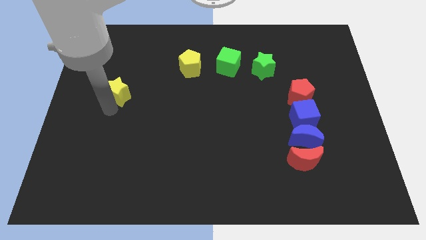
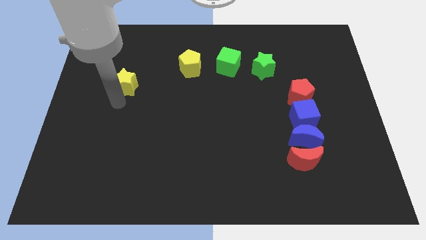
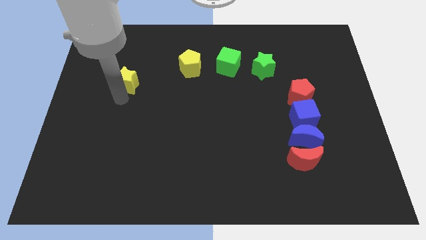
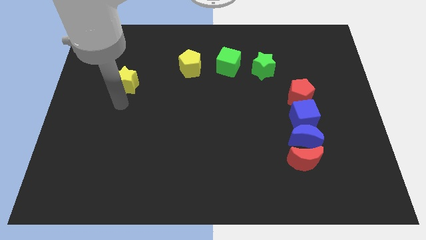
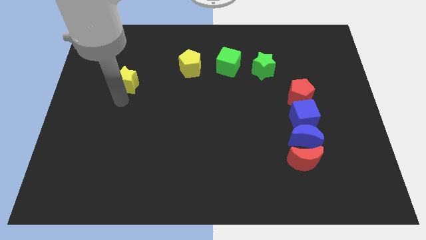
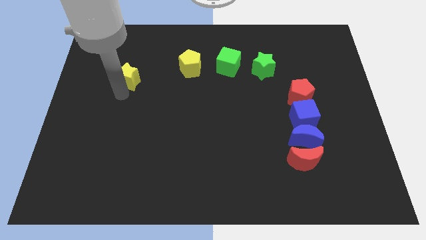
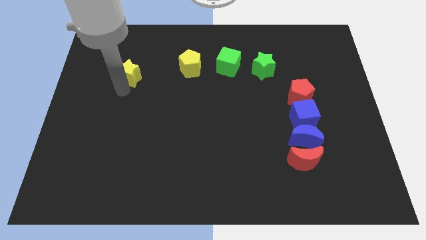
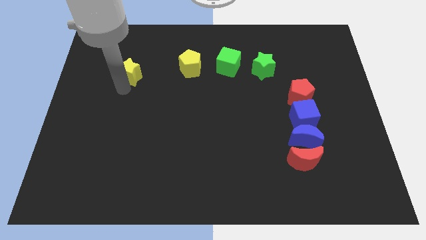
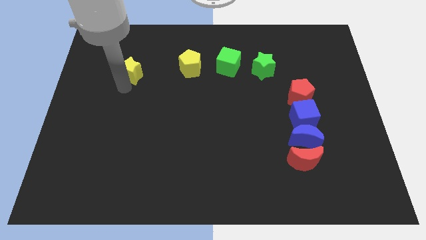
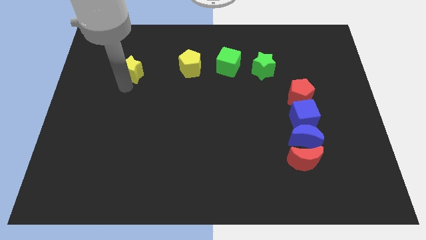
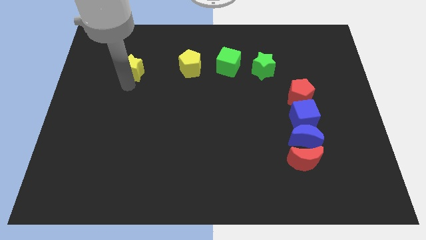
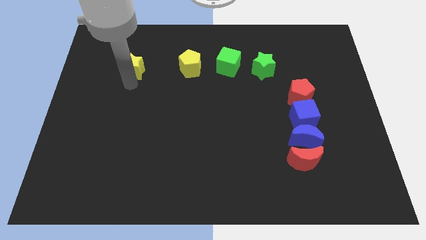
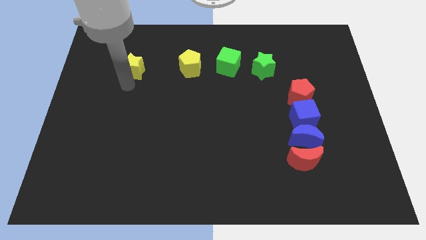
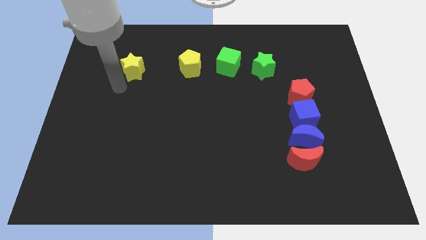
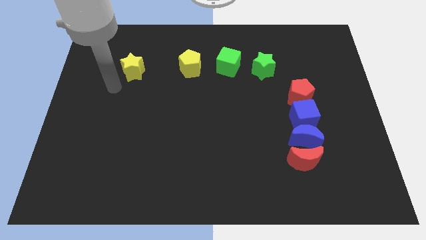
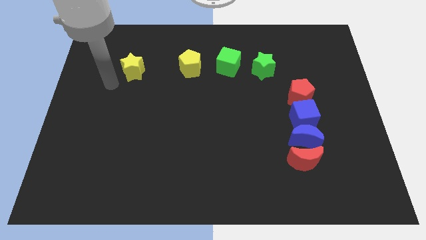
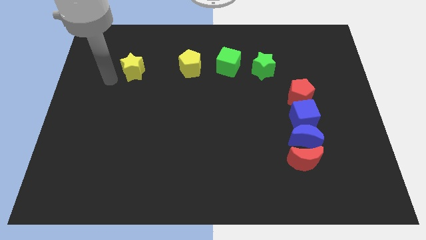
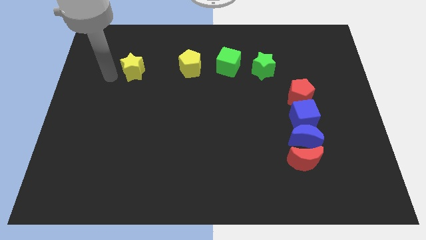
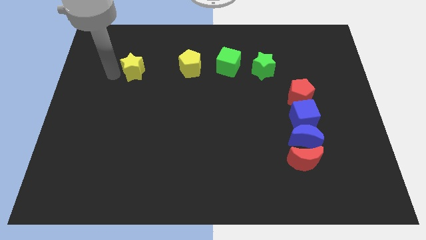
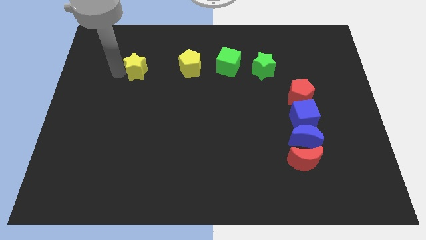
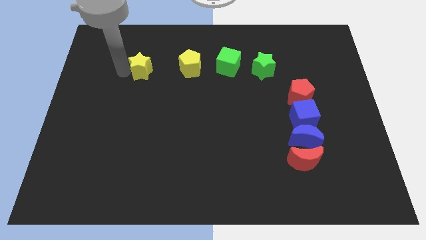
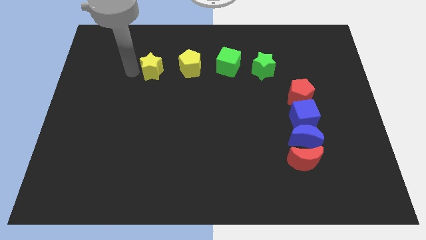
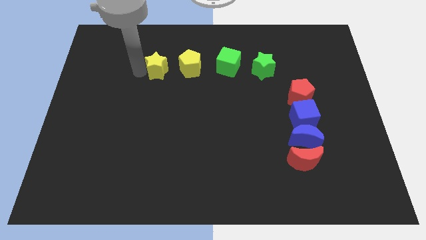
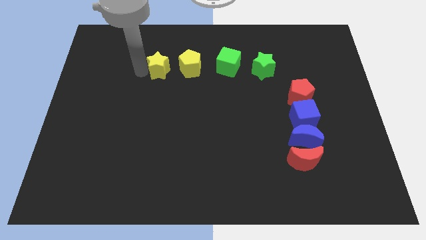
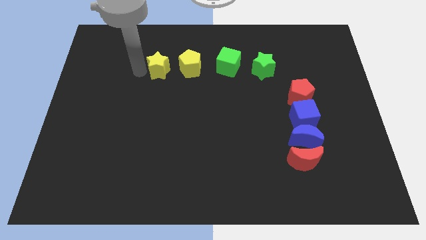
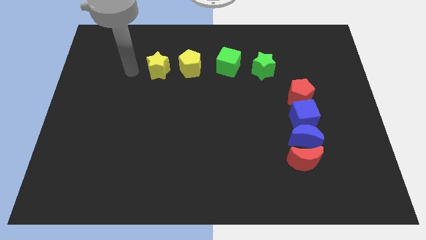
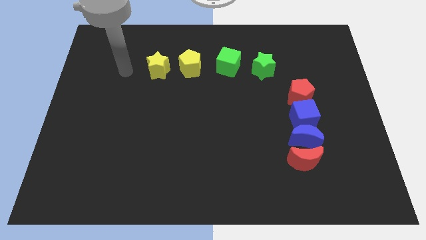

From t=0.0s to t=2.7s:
slightly move the yellow star towards the right

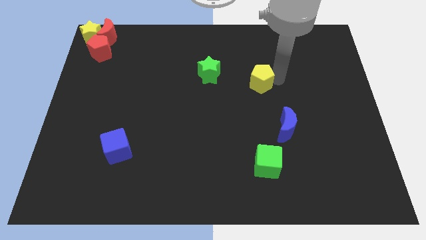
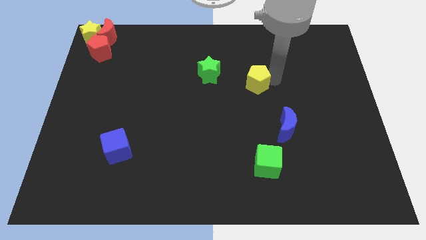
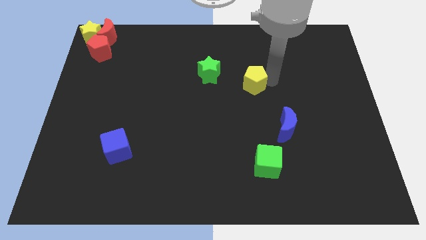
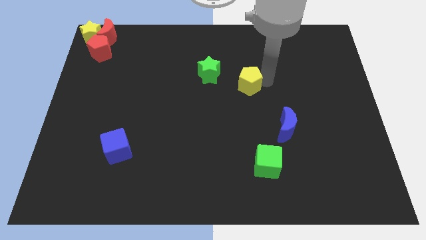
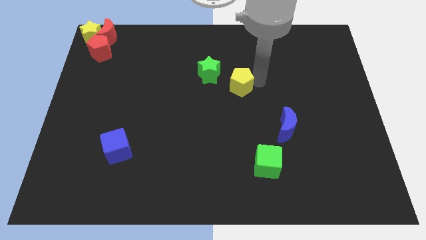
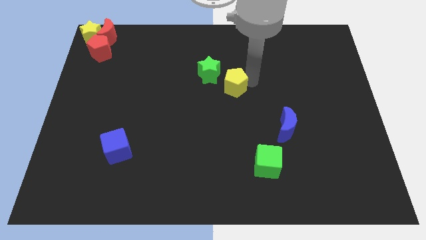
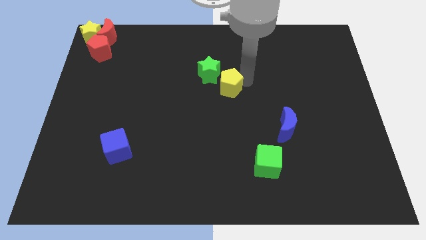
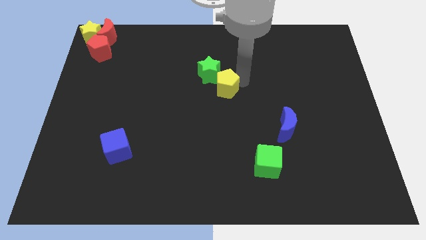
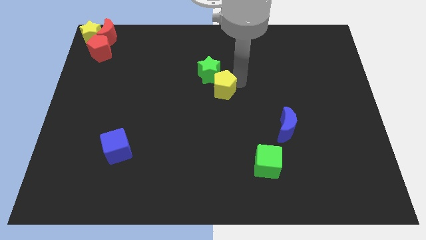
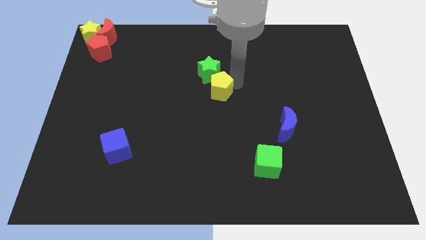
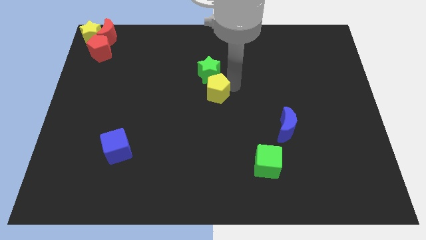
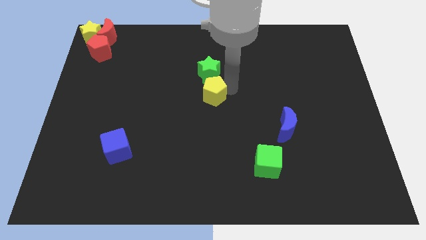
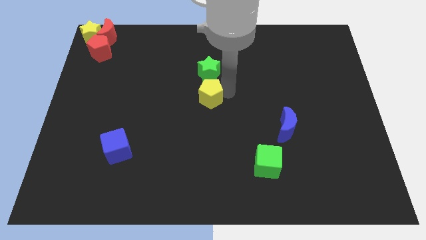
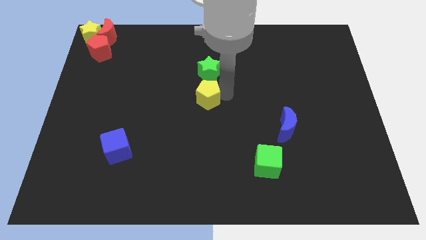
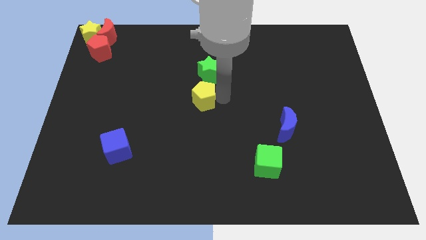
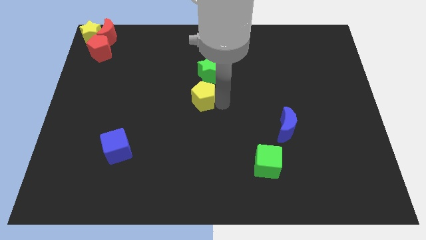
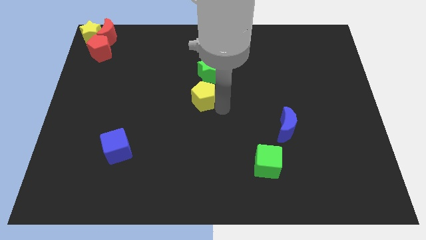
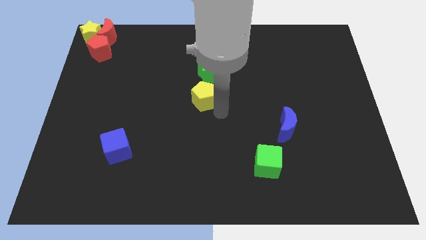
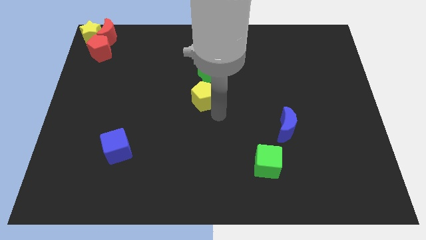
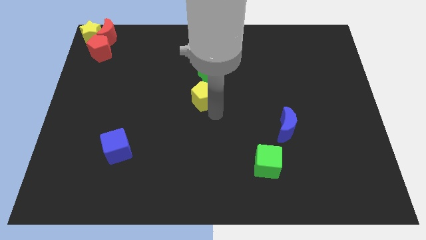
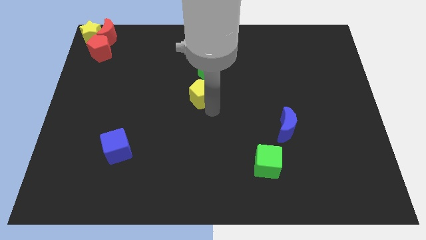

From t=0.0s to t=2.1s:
drag yellow pentagon below green star

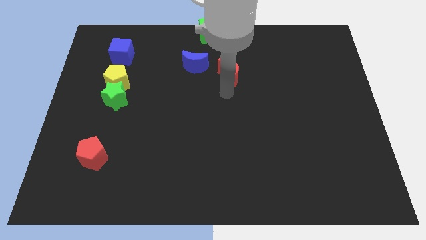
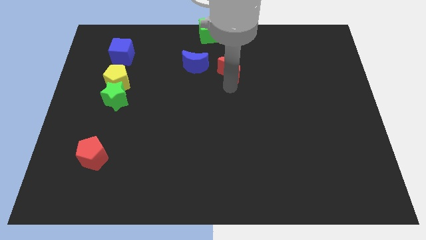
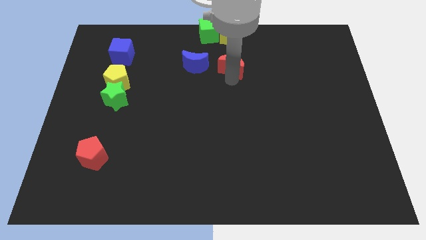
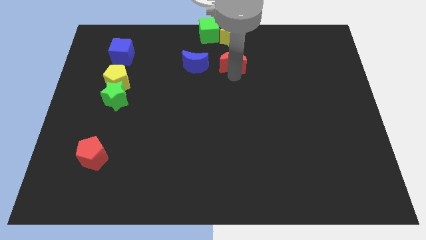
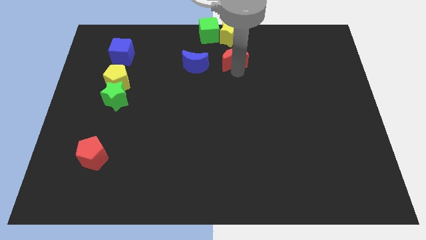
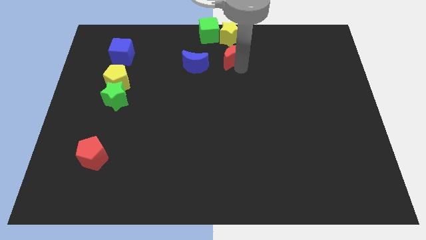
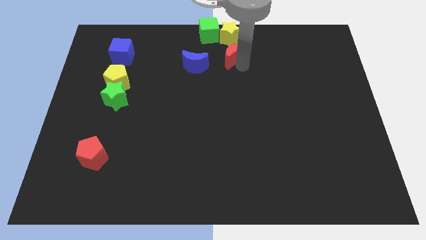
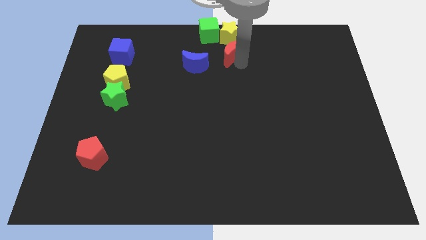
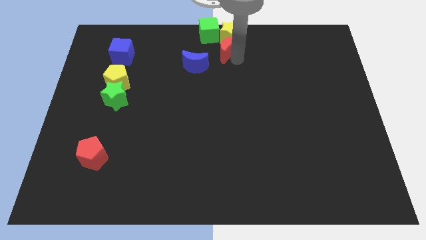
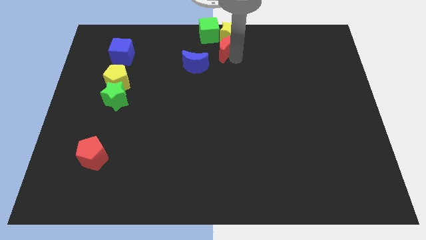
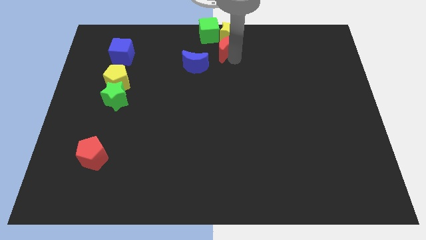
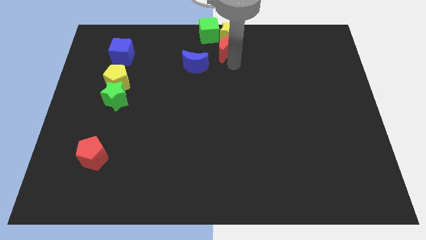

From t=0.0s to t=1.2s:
push the red crescent below to the yellow star vertically

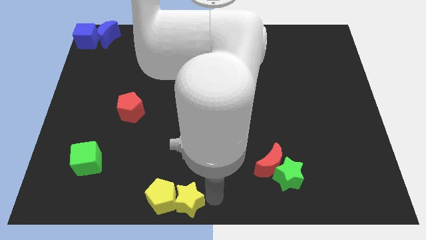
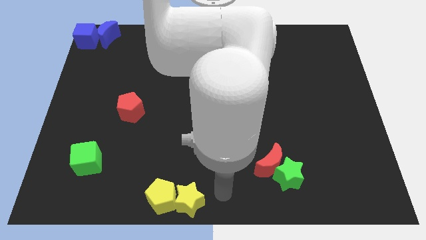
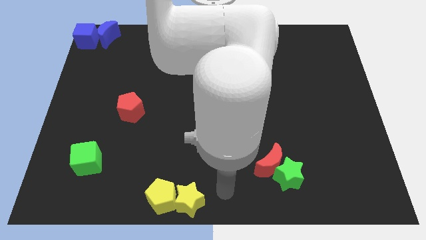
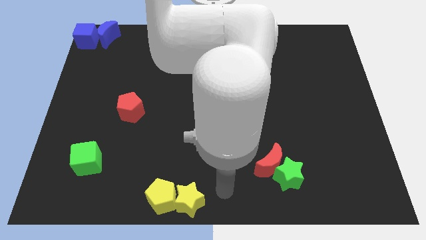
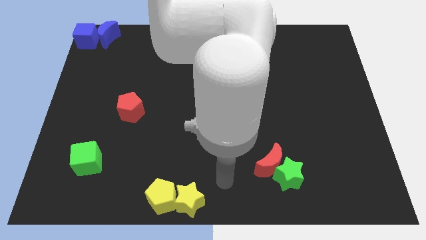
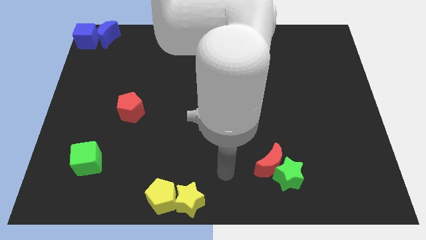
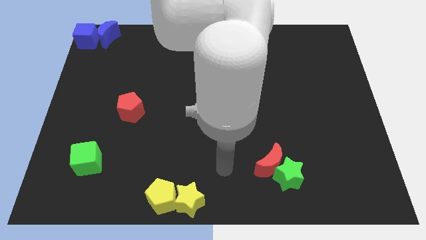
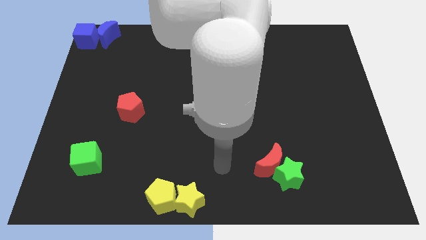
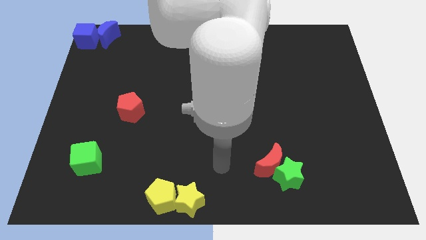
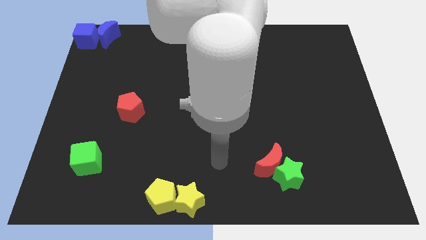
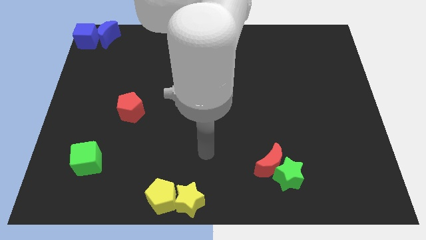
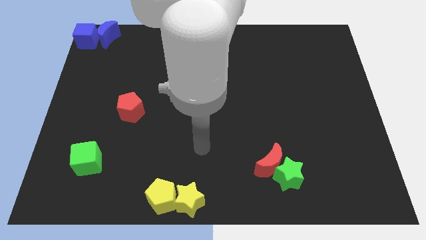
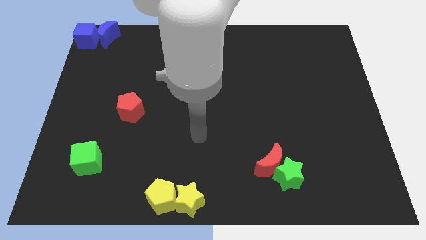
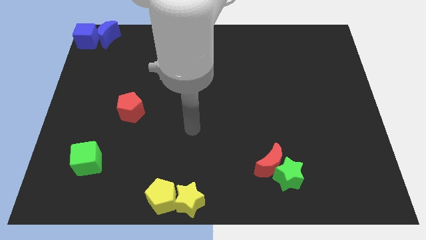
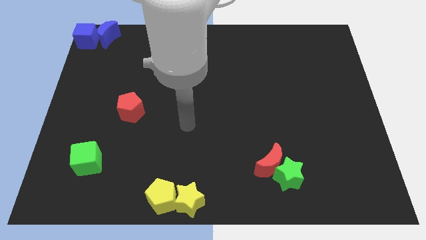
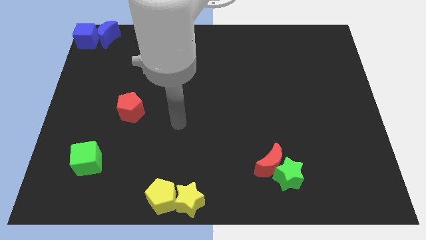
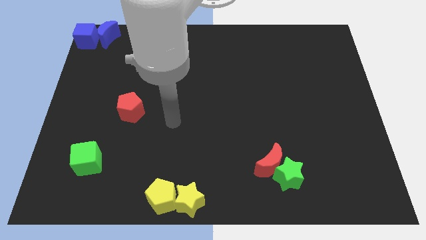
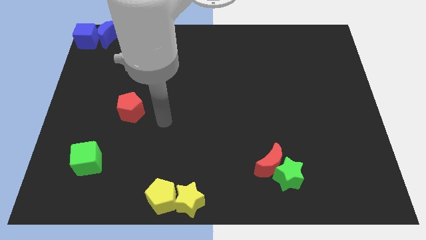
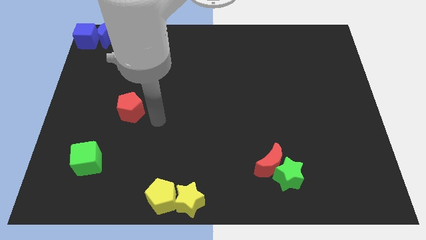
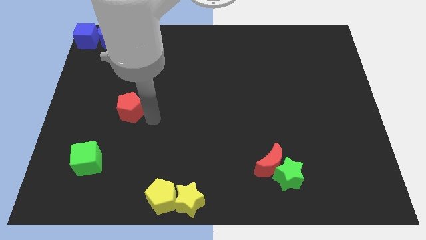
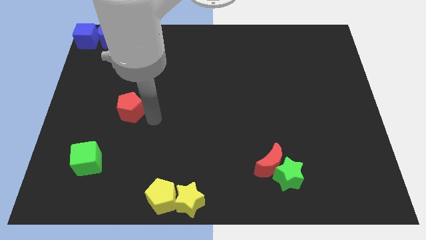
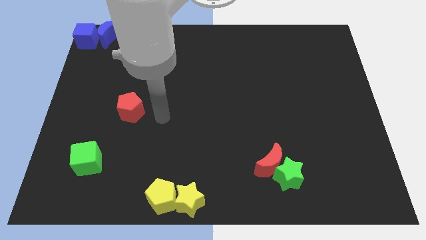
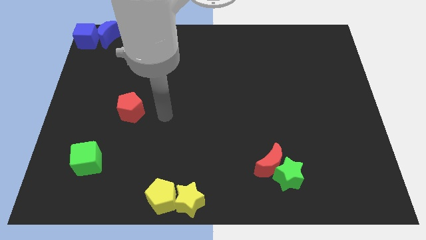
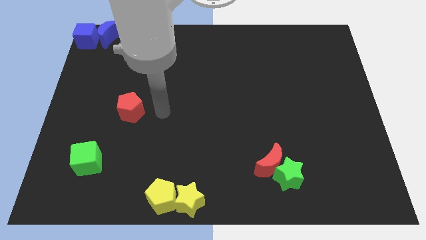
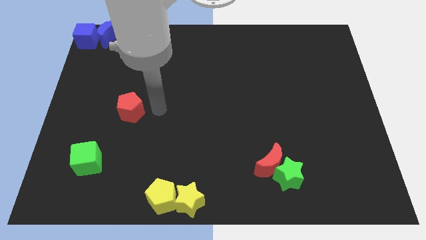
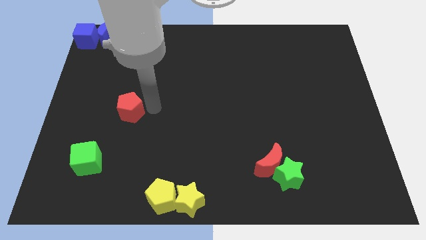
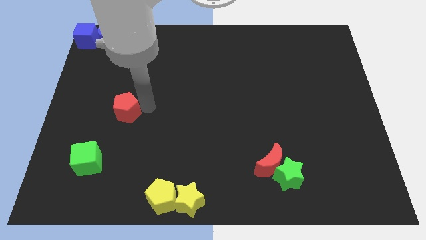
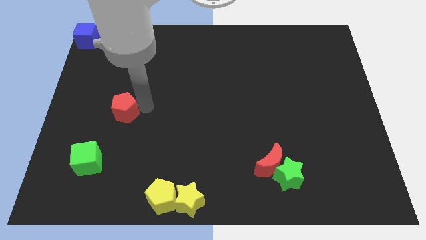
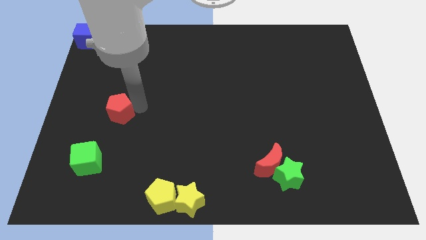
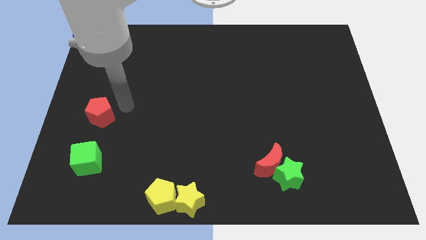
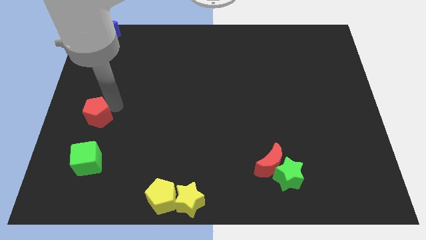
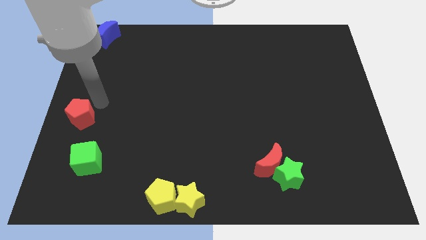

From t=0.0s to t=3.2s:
put the red pentagon vertically above the green cube
